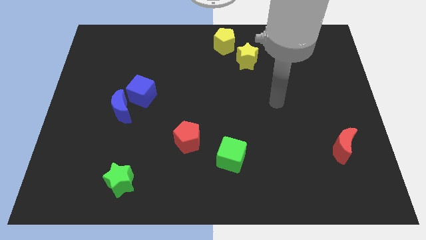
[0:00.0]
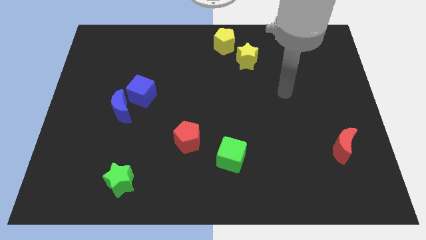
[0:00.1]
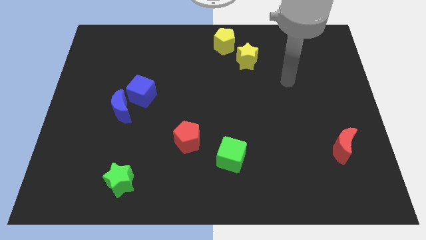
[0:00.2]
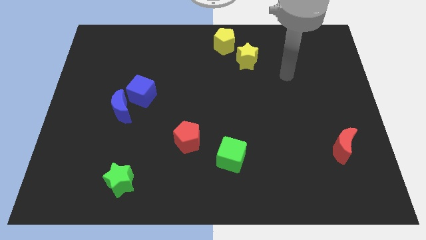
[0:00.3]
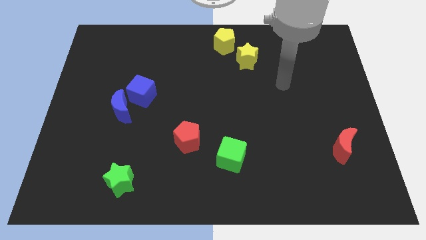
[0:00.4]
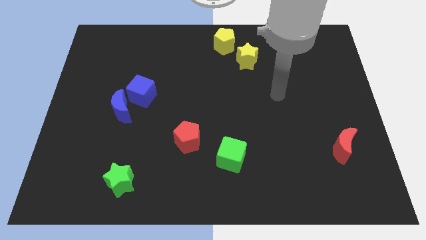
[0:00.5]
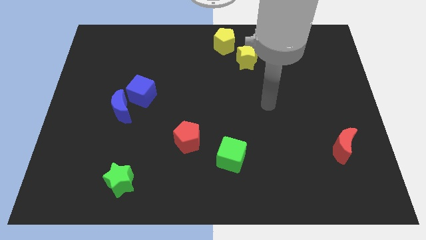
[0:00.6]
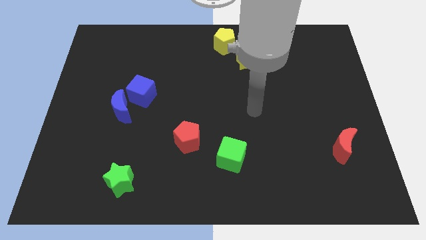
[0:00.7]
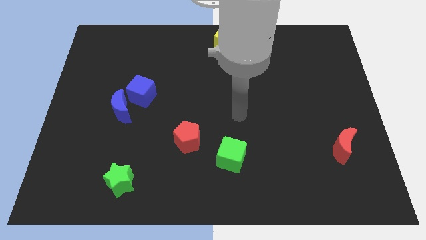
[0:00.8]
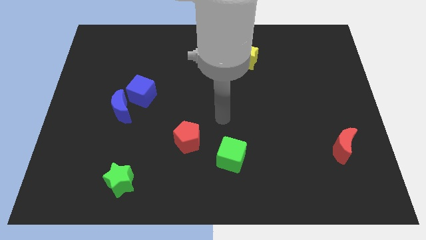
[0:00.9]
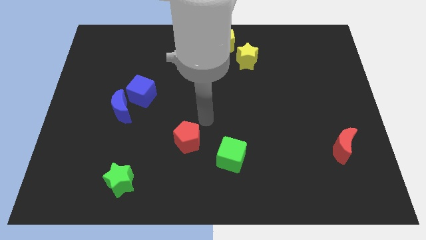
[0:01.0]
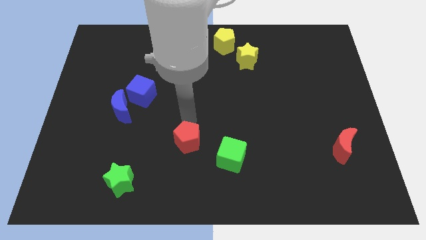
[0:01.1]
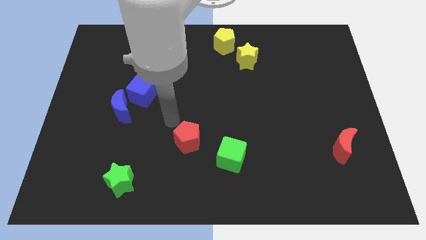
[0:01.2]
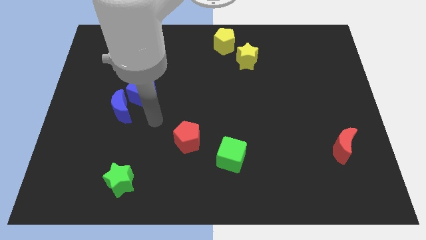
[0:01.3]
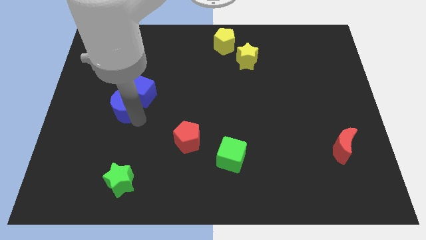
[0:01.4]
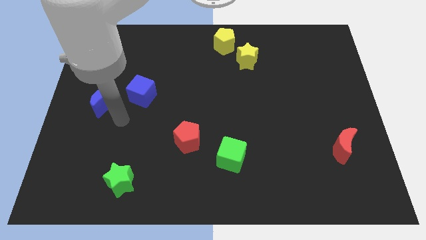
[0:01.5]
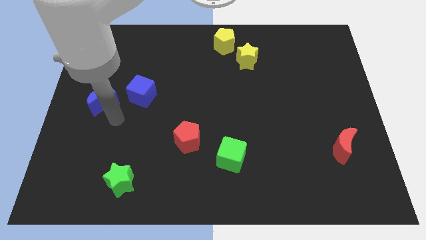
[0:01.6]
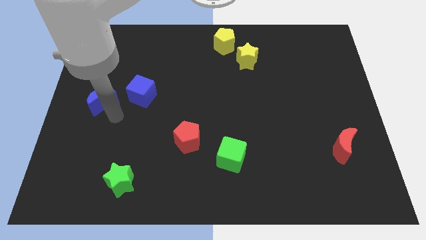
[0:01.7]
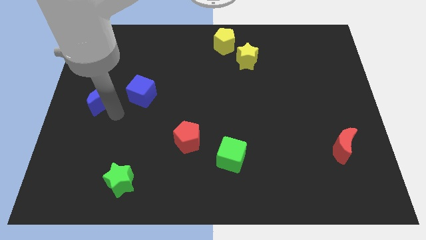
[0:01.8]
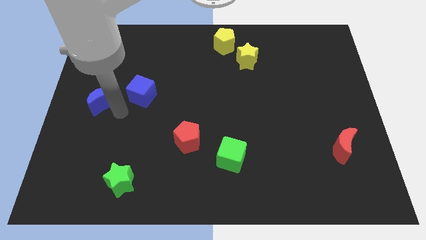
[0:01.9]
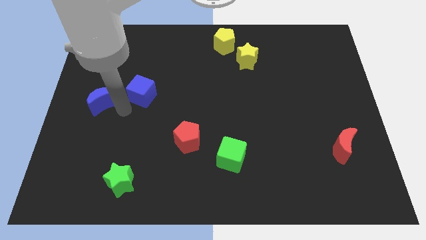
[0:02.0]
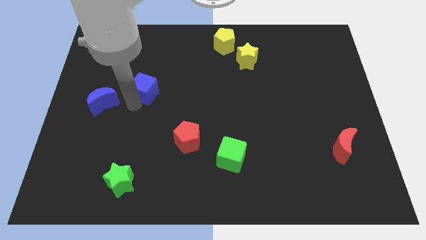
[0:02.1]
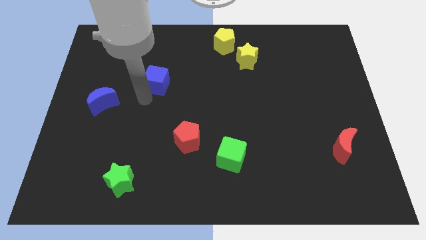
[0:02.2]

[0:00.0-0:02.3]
move the blue crescent to the left

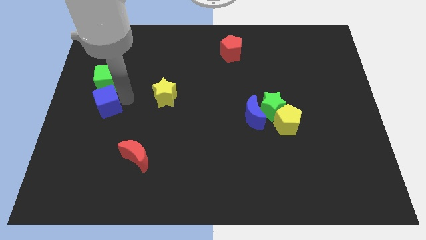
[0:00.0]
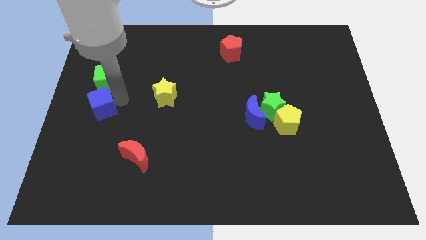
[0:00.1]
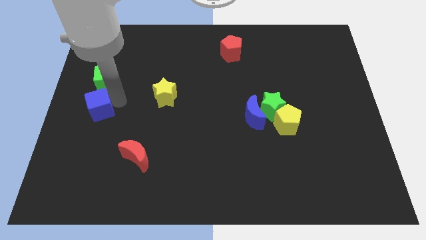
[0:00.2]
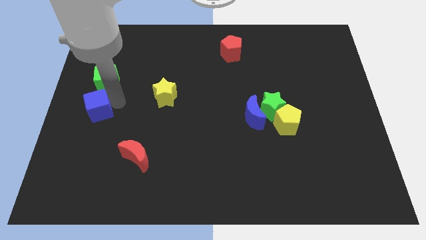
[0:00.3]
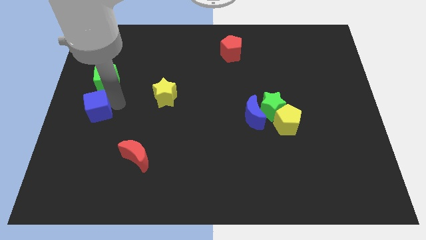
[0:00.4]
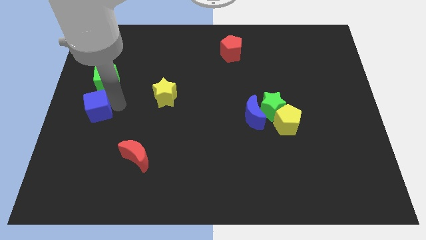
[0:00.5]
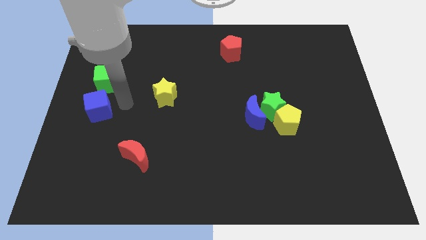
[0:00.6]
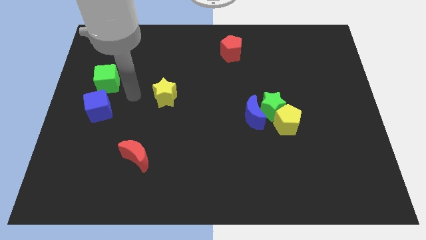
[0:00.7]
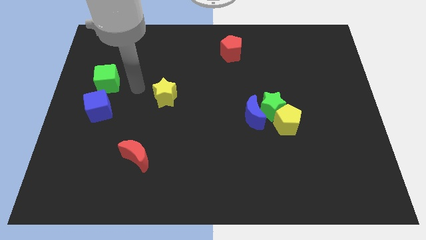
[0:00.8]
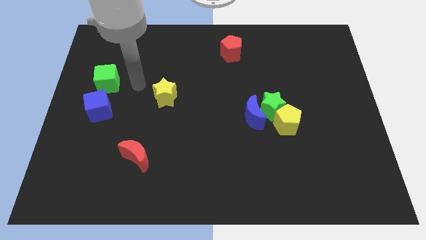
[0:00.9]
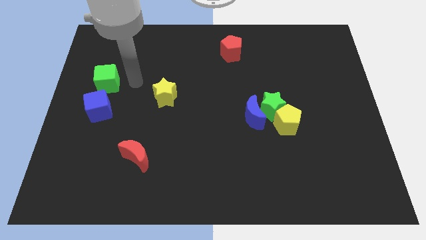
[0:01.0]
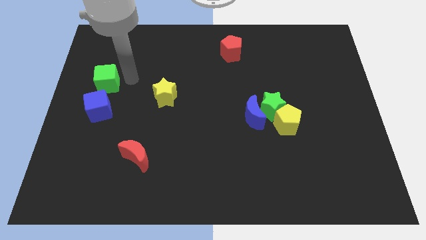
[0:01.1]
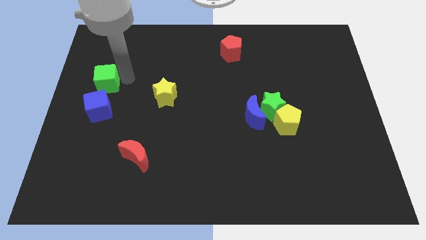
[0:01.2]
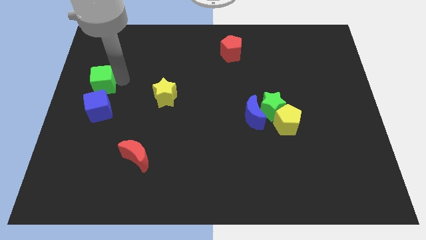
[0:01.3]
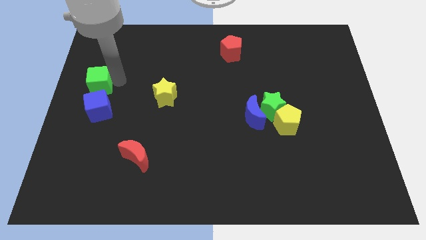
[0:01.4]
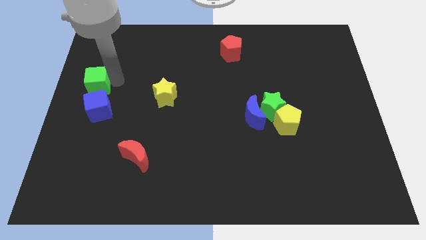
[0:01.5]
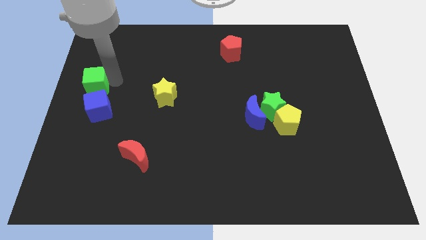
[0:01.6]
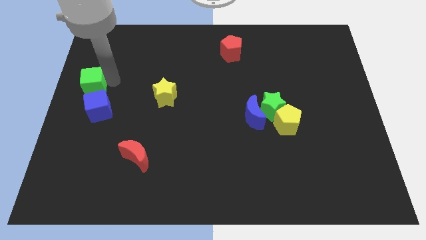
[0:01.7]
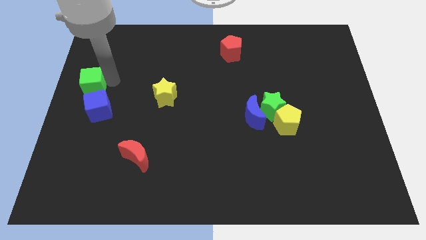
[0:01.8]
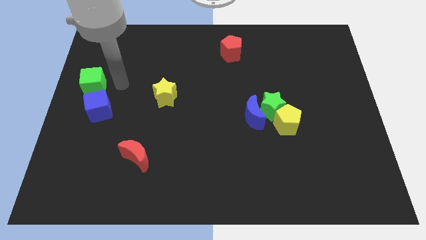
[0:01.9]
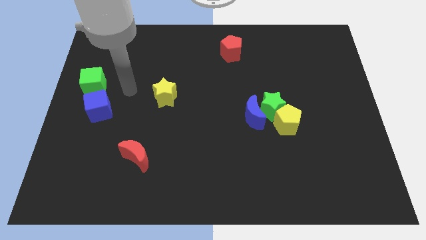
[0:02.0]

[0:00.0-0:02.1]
move the green cube and blue cube to the center left of the board

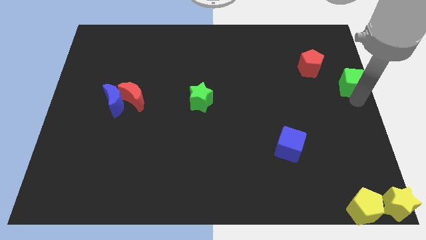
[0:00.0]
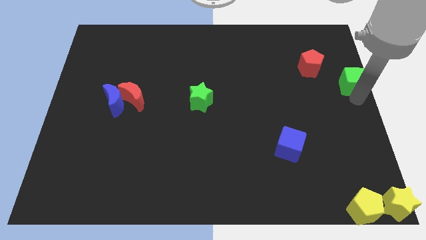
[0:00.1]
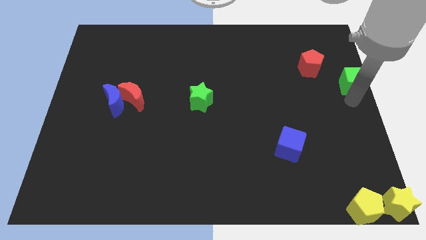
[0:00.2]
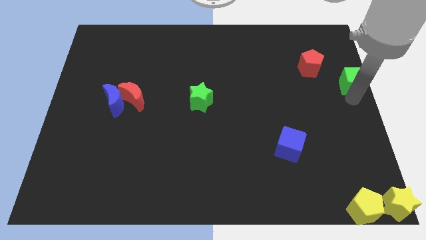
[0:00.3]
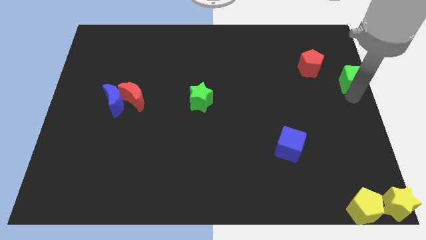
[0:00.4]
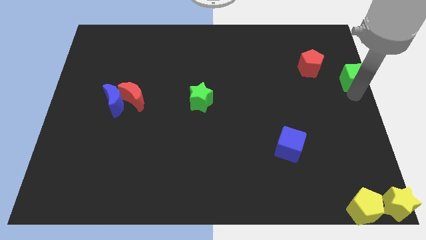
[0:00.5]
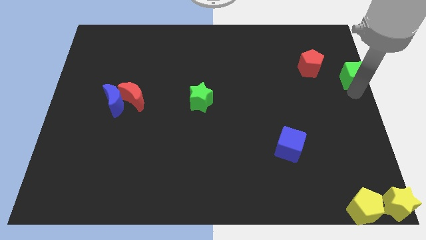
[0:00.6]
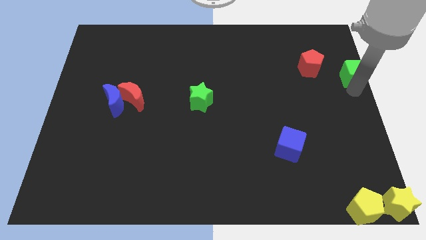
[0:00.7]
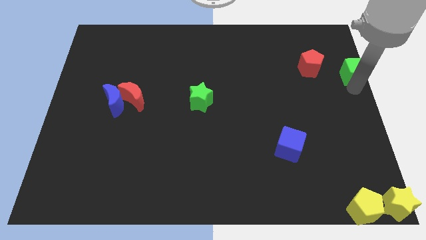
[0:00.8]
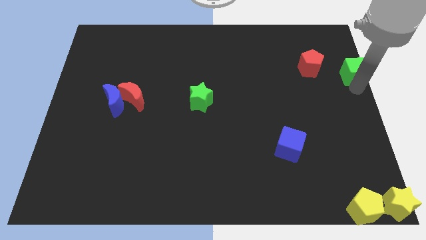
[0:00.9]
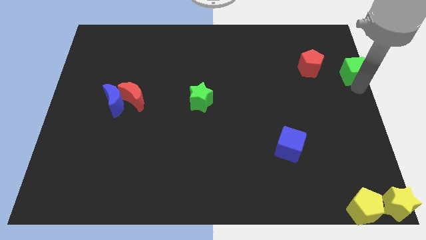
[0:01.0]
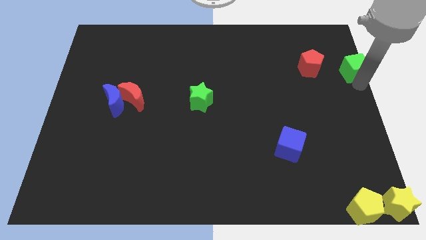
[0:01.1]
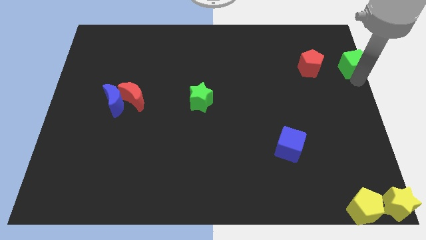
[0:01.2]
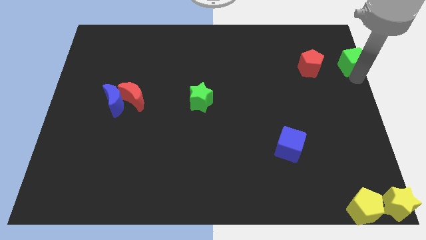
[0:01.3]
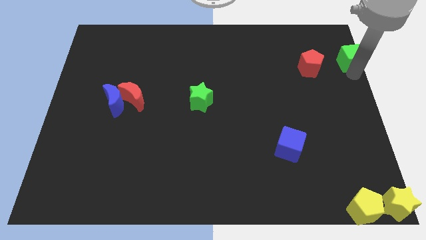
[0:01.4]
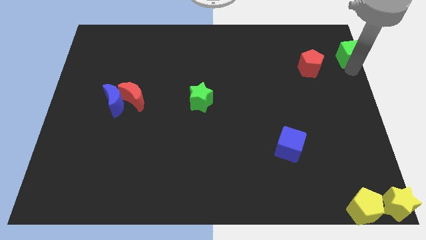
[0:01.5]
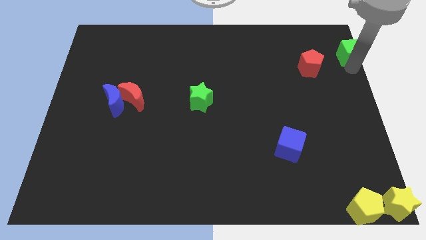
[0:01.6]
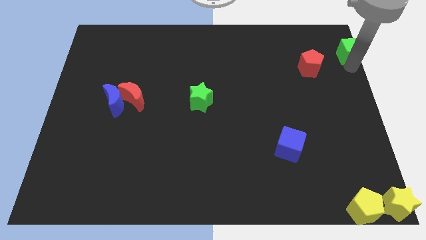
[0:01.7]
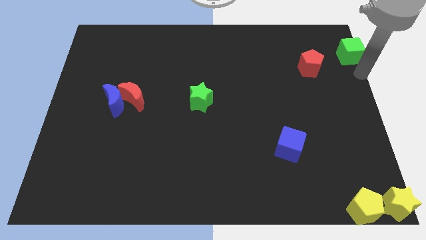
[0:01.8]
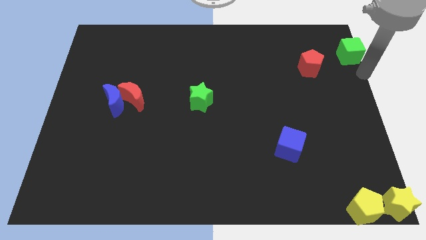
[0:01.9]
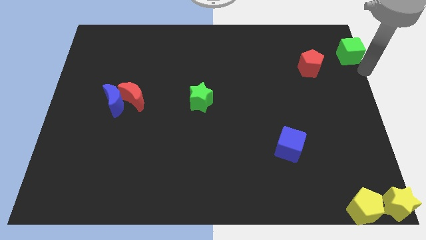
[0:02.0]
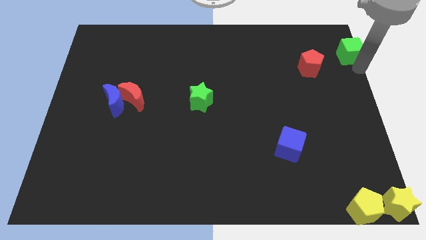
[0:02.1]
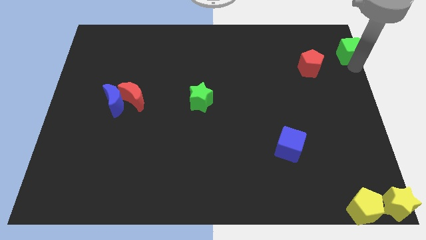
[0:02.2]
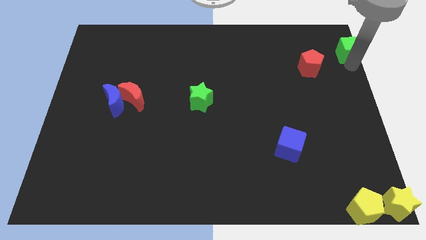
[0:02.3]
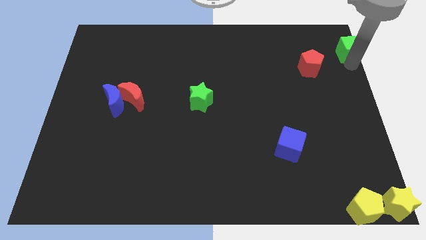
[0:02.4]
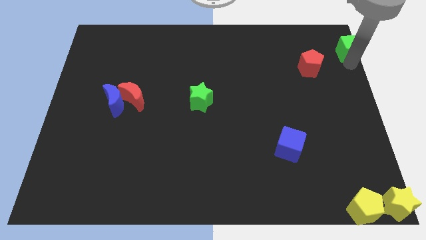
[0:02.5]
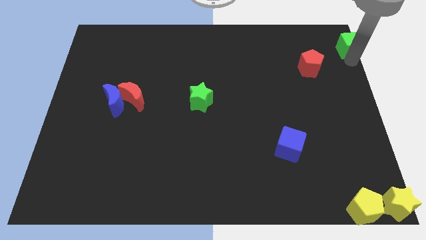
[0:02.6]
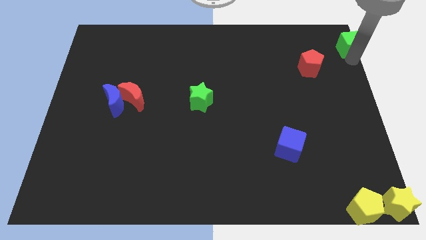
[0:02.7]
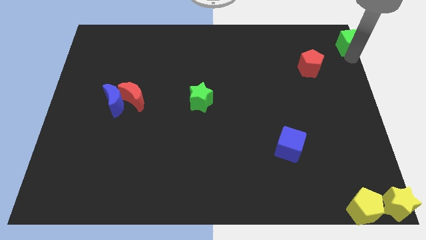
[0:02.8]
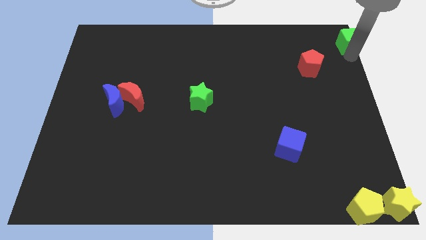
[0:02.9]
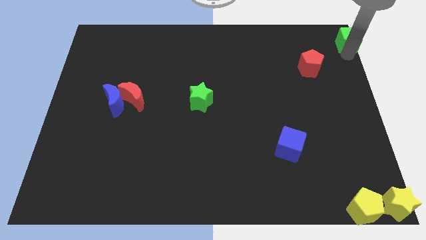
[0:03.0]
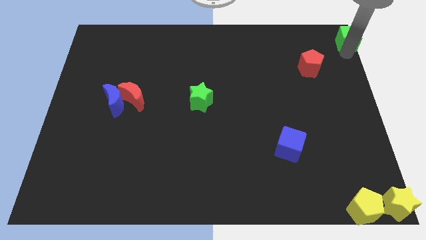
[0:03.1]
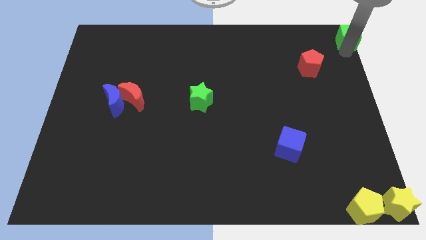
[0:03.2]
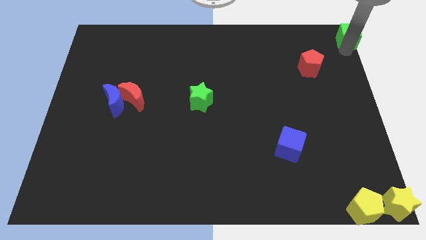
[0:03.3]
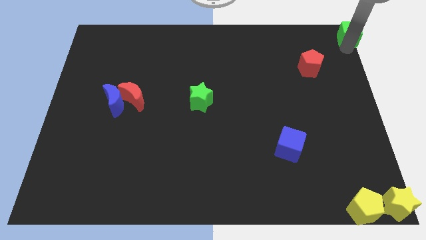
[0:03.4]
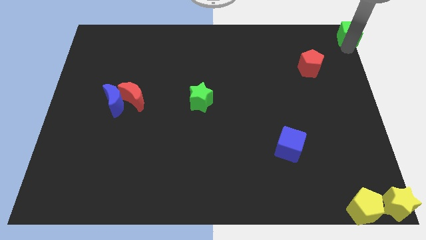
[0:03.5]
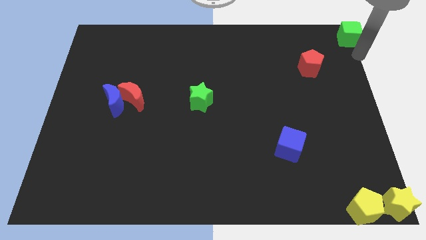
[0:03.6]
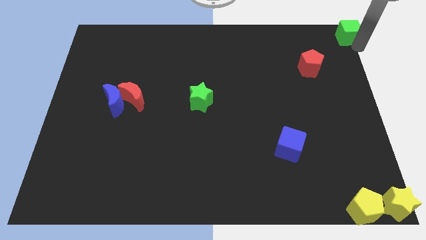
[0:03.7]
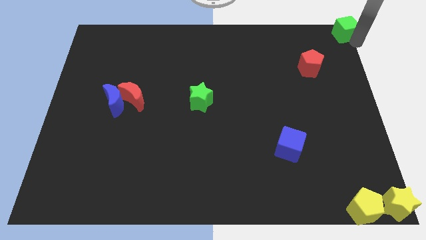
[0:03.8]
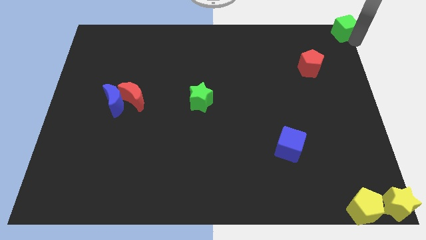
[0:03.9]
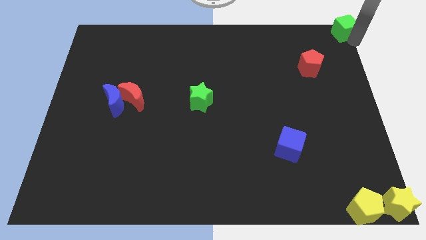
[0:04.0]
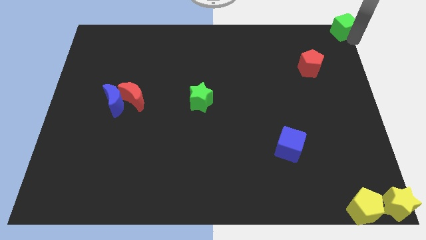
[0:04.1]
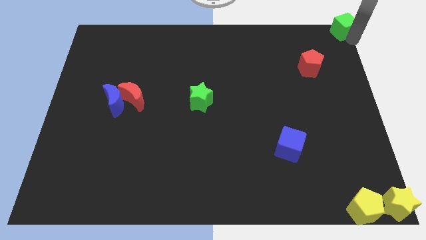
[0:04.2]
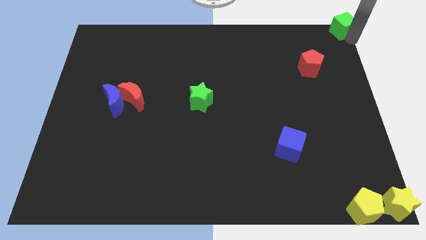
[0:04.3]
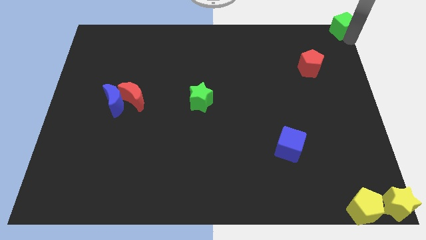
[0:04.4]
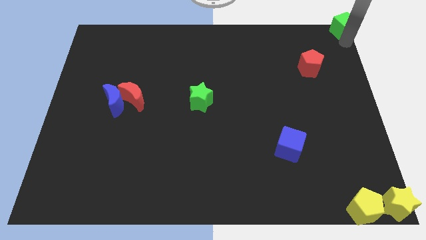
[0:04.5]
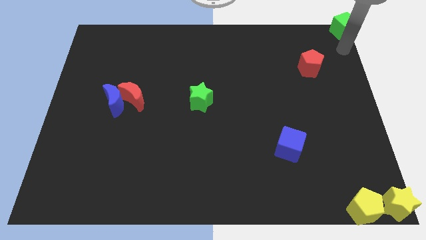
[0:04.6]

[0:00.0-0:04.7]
move the green cube to the top right of the board
